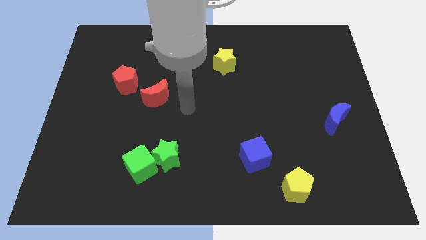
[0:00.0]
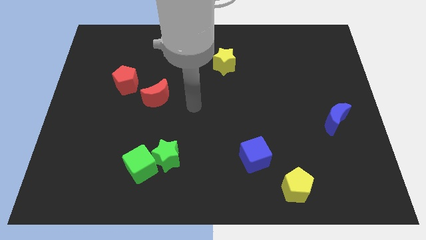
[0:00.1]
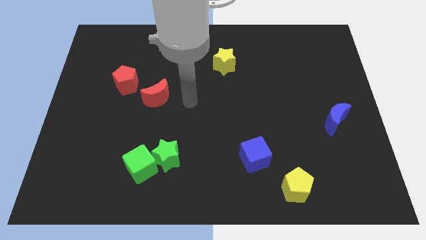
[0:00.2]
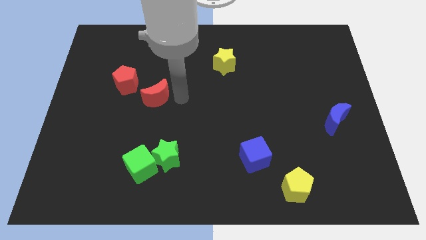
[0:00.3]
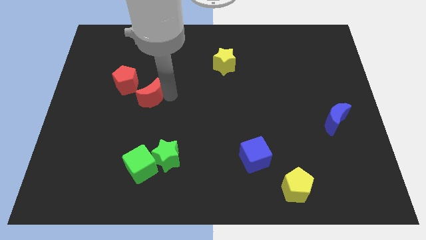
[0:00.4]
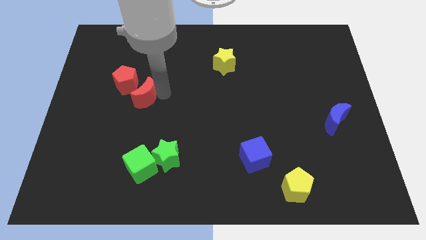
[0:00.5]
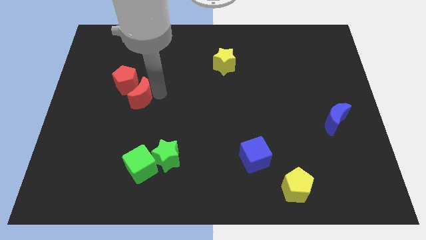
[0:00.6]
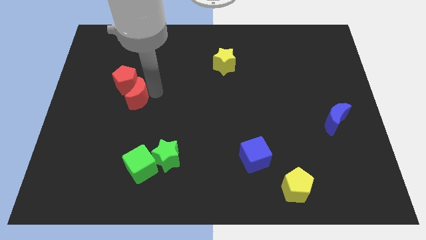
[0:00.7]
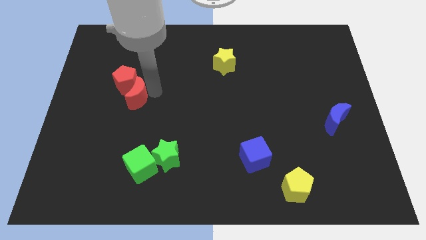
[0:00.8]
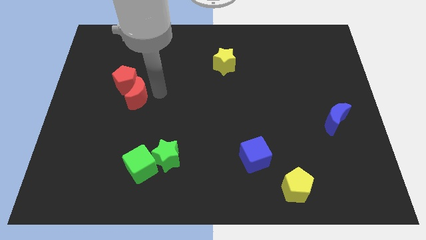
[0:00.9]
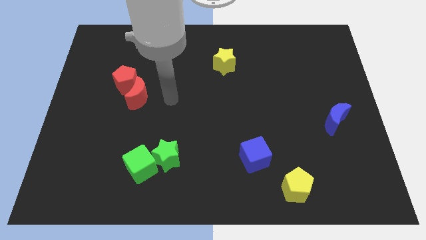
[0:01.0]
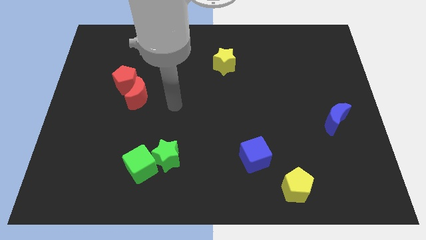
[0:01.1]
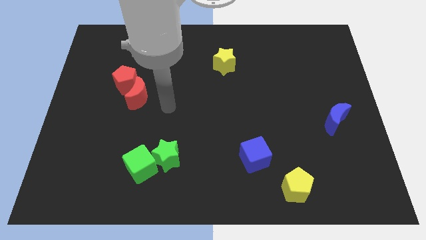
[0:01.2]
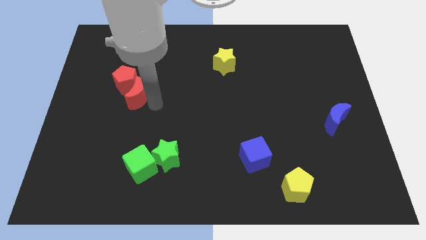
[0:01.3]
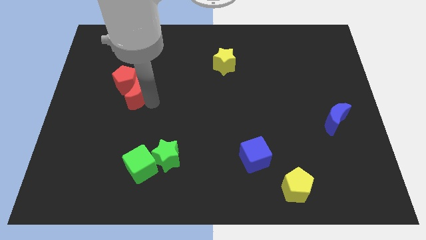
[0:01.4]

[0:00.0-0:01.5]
push red crescent into the red pentagon

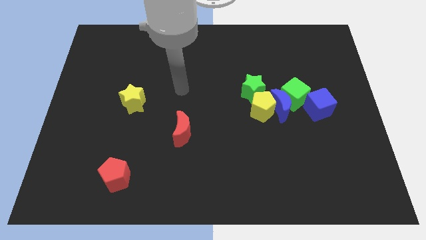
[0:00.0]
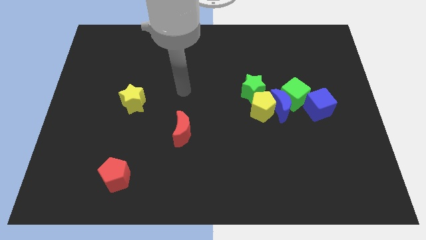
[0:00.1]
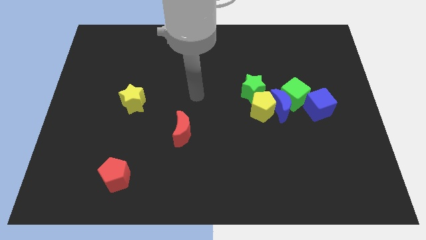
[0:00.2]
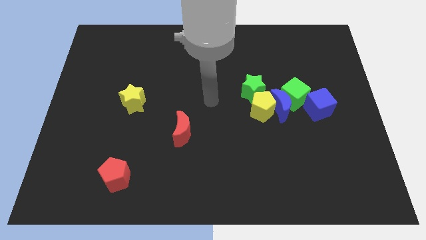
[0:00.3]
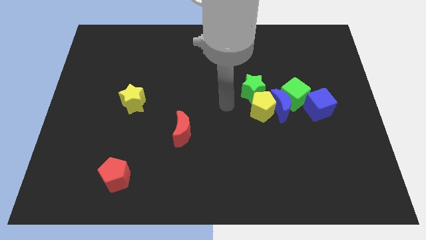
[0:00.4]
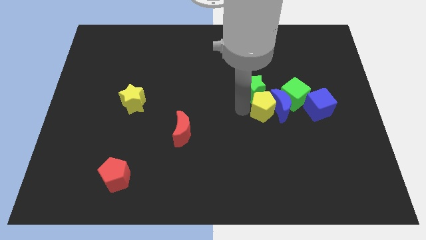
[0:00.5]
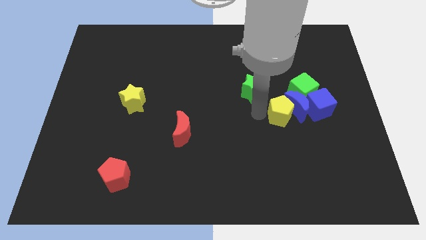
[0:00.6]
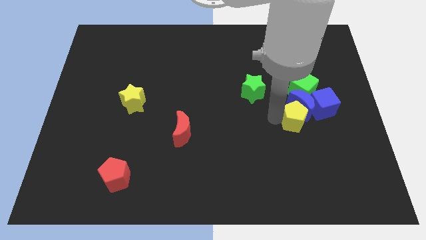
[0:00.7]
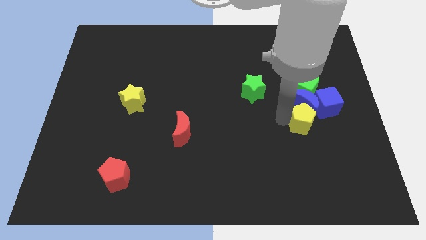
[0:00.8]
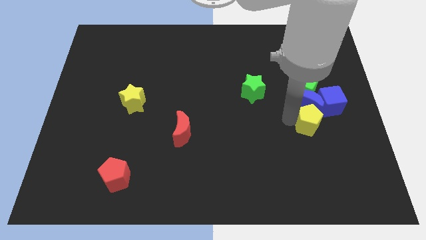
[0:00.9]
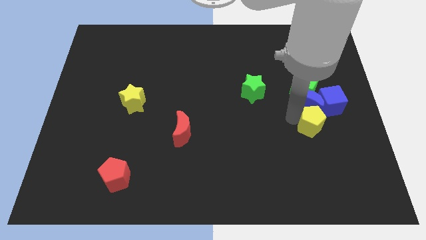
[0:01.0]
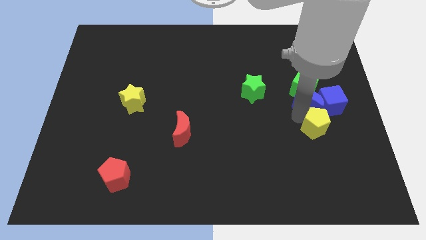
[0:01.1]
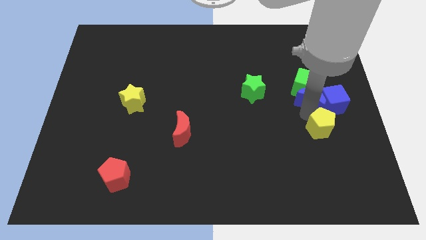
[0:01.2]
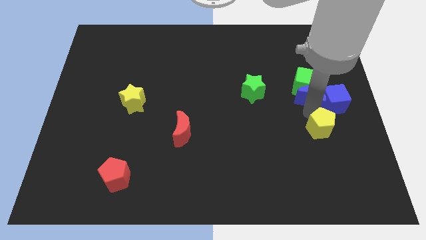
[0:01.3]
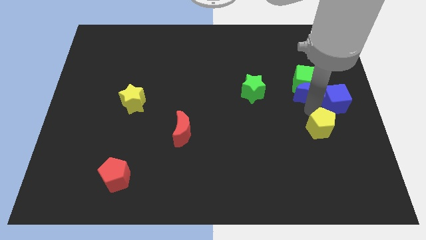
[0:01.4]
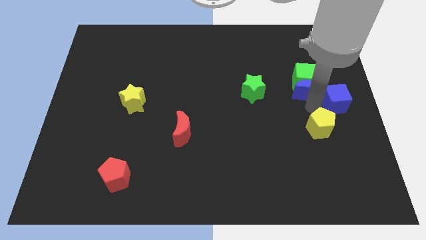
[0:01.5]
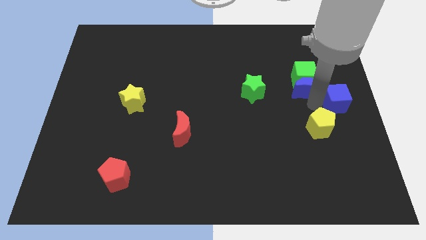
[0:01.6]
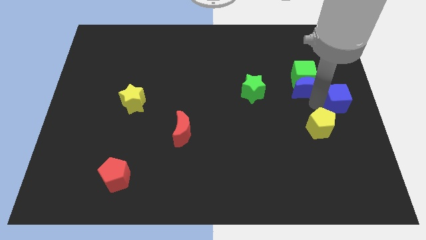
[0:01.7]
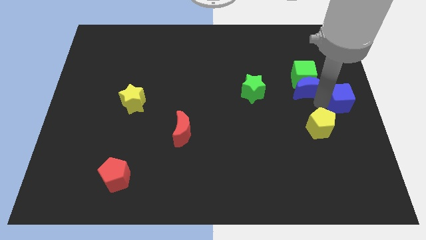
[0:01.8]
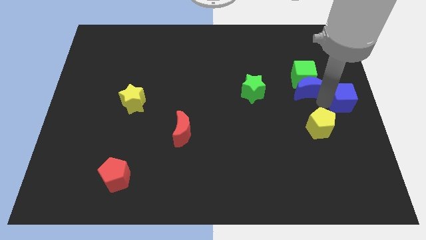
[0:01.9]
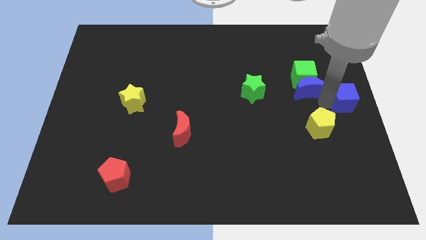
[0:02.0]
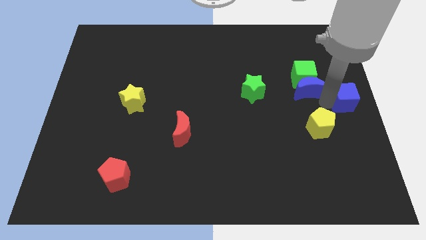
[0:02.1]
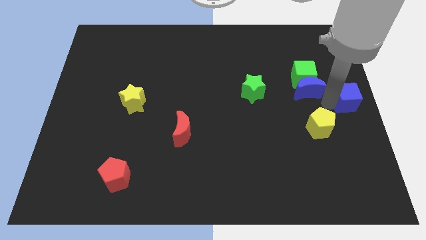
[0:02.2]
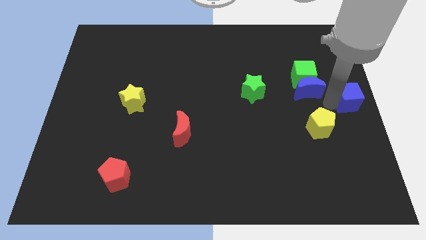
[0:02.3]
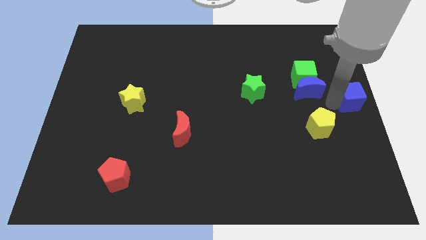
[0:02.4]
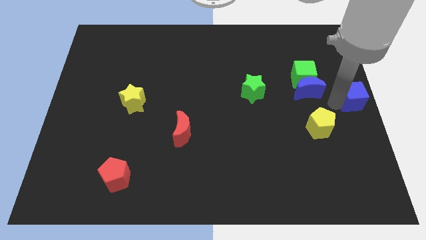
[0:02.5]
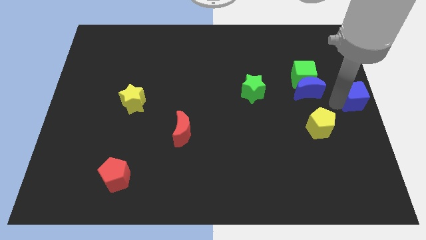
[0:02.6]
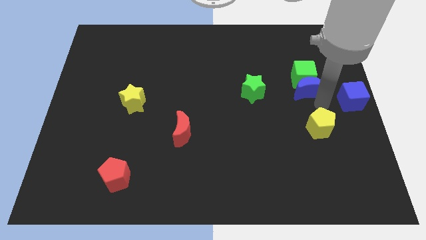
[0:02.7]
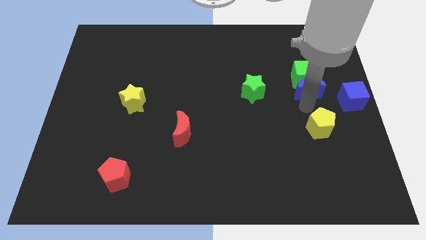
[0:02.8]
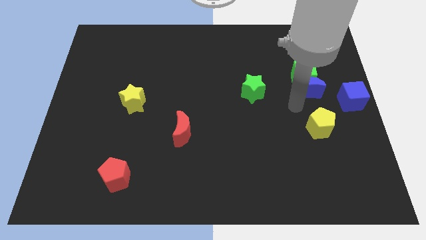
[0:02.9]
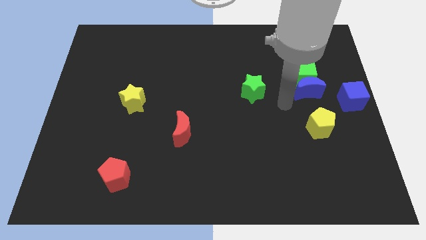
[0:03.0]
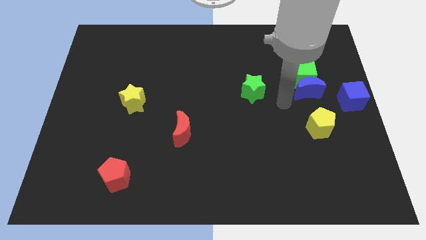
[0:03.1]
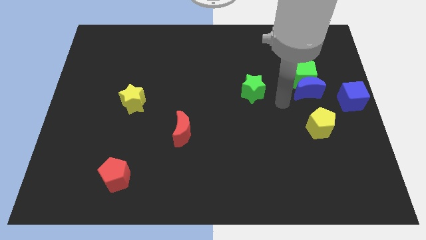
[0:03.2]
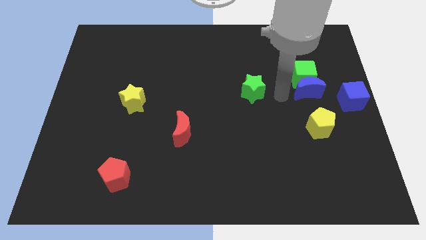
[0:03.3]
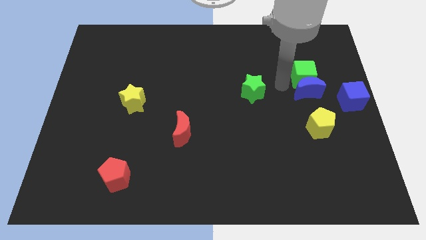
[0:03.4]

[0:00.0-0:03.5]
make a triangle with the help of yellow pentagon blue cube and blue moon

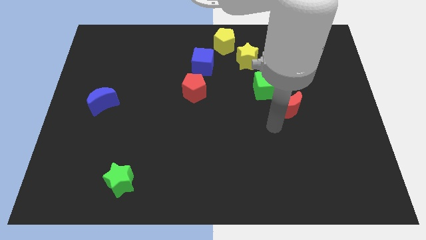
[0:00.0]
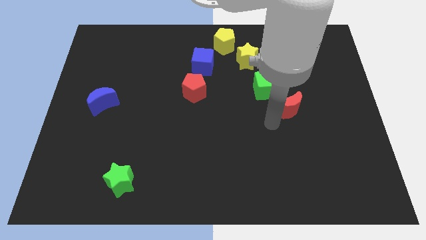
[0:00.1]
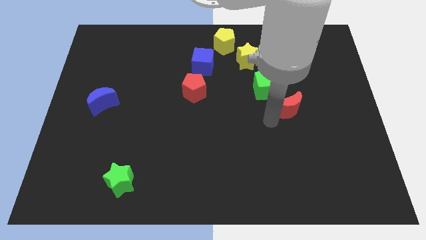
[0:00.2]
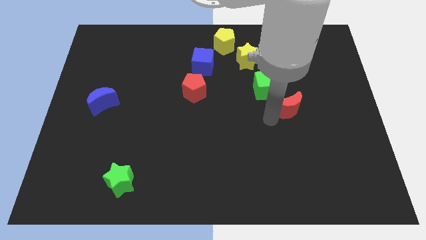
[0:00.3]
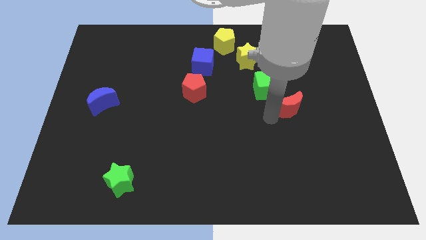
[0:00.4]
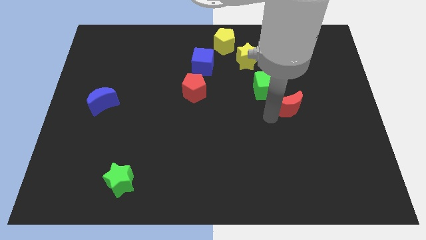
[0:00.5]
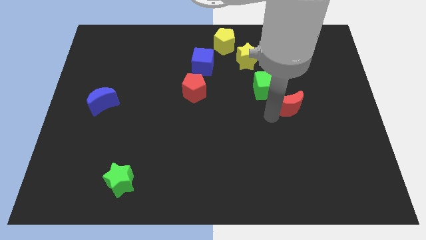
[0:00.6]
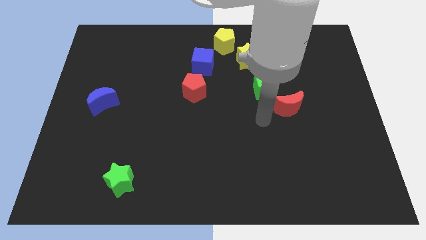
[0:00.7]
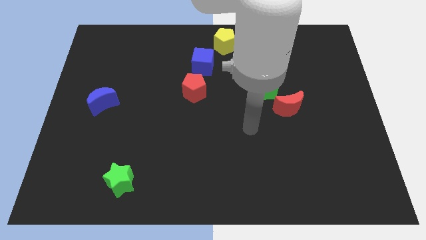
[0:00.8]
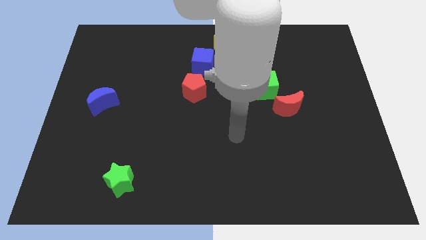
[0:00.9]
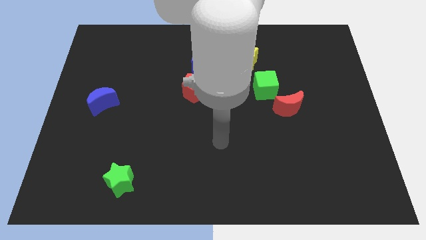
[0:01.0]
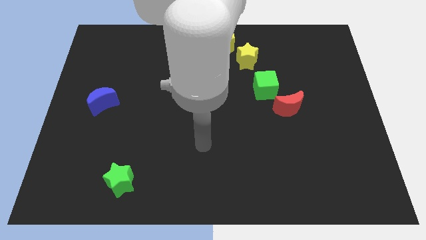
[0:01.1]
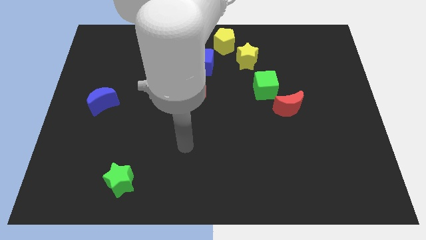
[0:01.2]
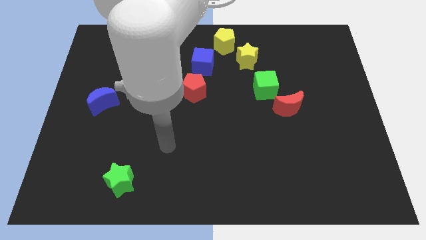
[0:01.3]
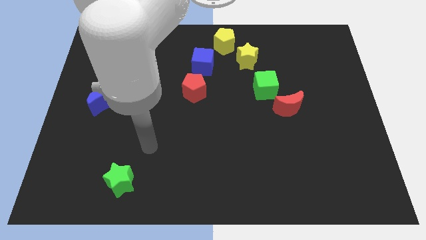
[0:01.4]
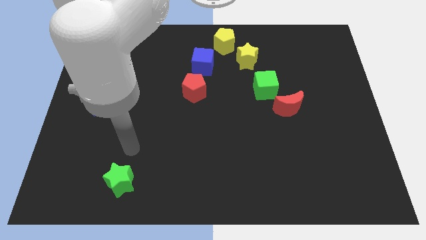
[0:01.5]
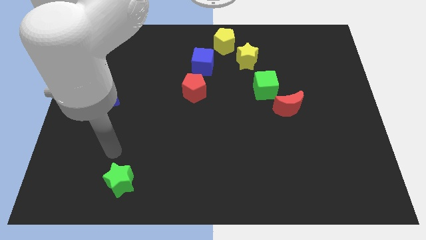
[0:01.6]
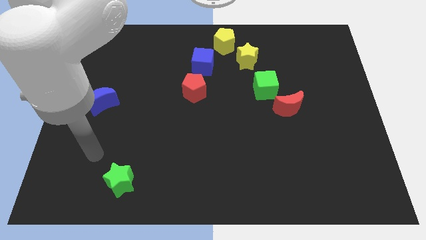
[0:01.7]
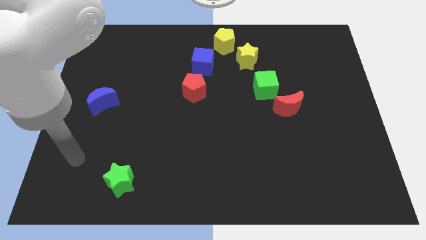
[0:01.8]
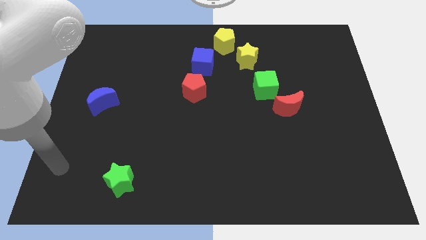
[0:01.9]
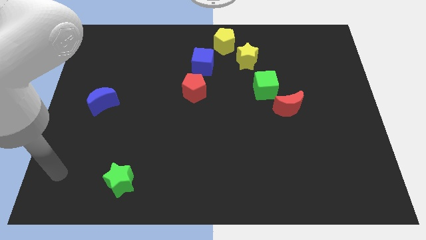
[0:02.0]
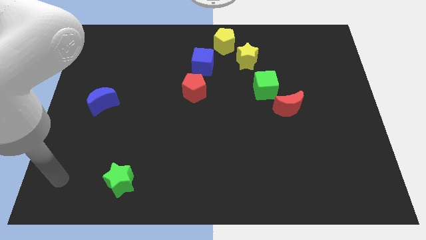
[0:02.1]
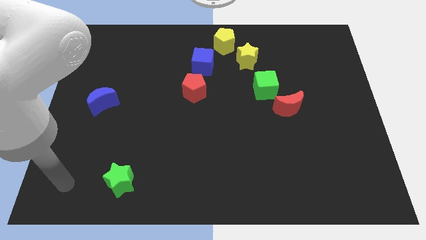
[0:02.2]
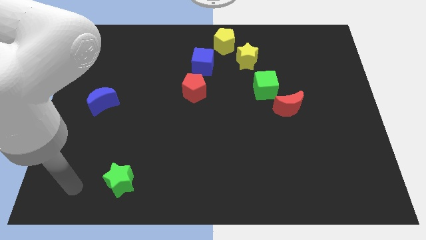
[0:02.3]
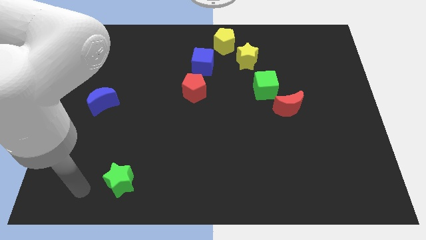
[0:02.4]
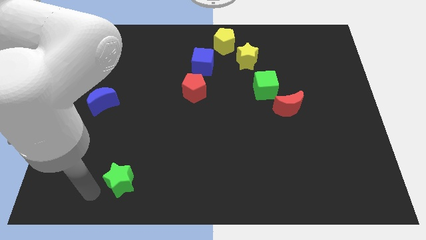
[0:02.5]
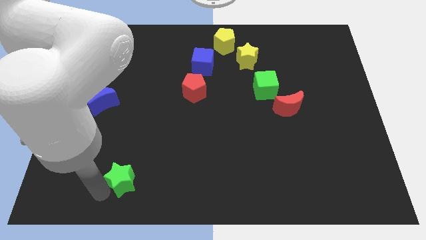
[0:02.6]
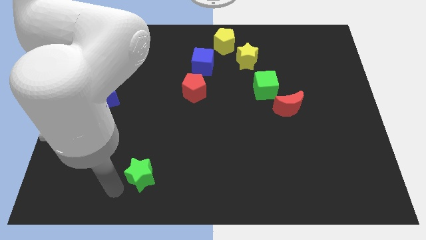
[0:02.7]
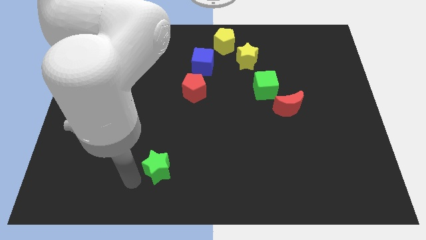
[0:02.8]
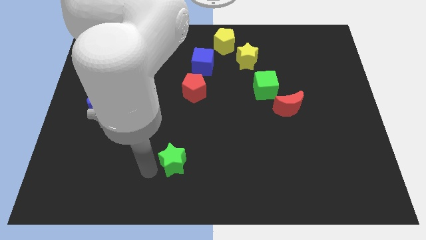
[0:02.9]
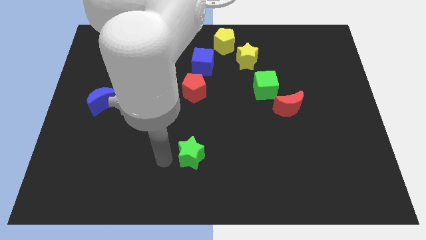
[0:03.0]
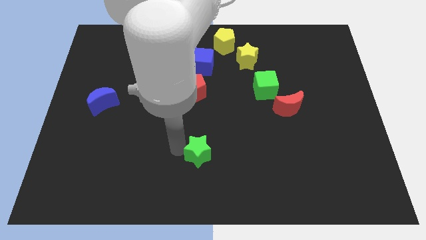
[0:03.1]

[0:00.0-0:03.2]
place green star below red pentagon and green cube

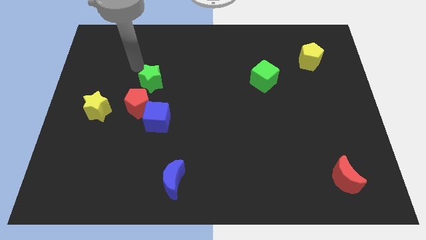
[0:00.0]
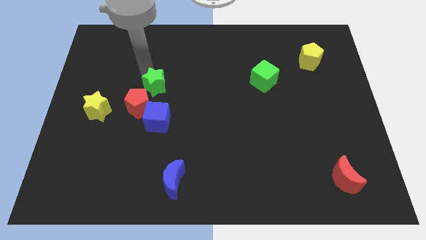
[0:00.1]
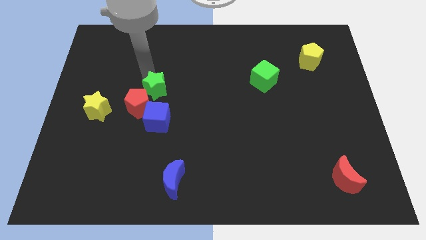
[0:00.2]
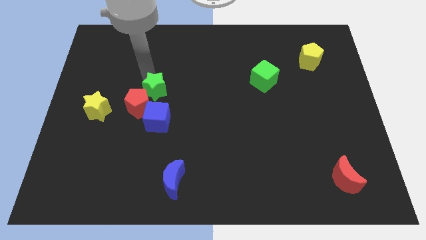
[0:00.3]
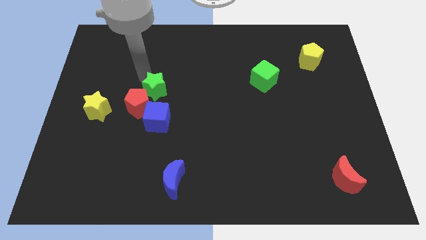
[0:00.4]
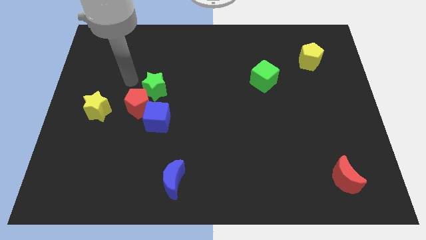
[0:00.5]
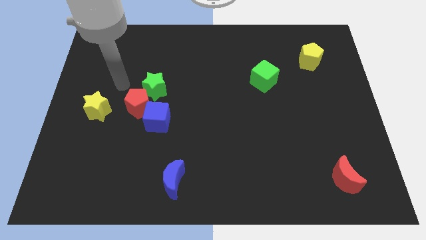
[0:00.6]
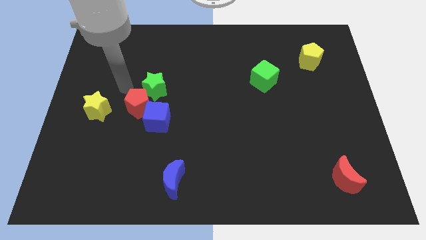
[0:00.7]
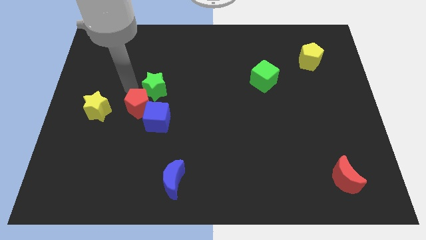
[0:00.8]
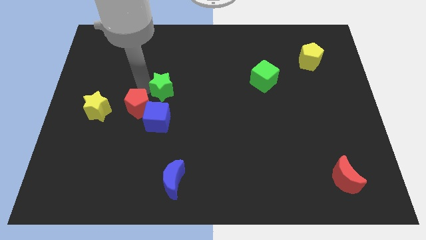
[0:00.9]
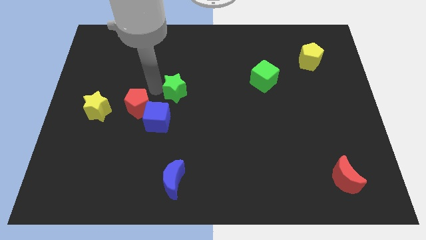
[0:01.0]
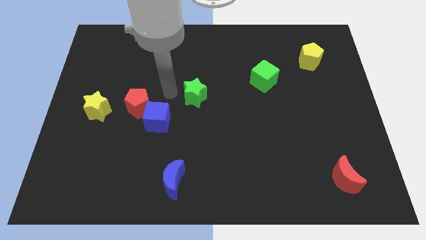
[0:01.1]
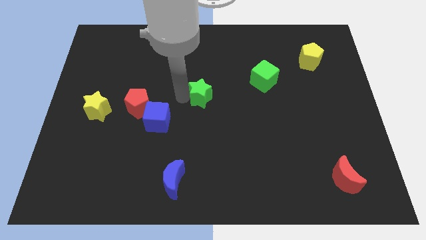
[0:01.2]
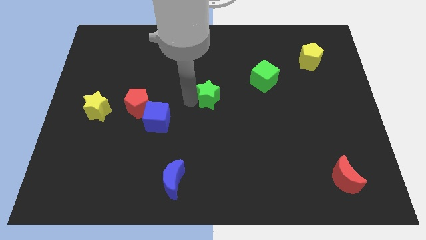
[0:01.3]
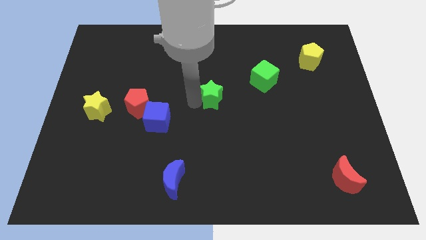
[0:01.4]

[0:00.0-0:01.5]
push the green star between the blue cube and green cube
